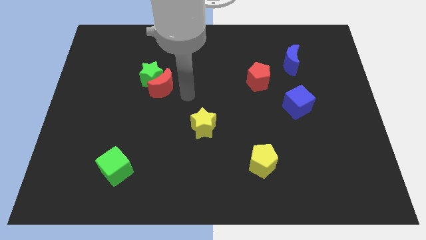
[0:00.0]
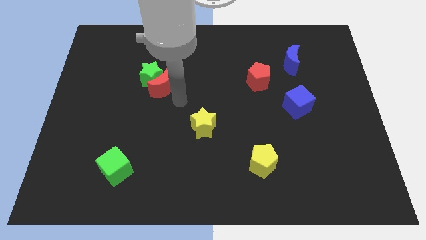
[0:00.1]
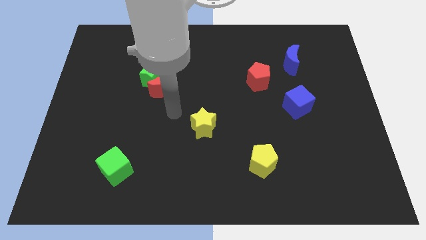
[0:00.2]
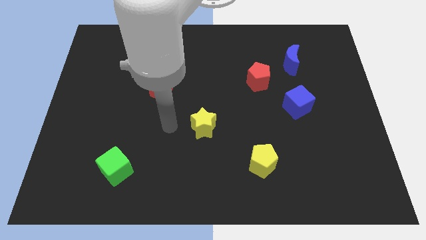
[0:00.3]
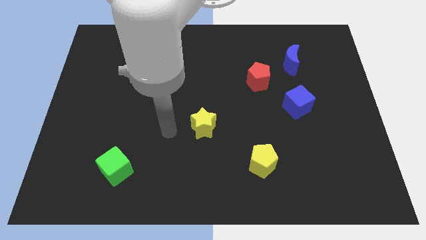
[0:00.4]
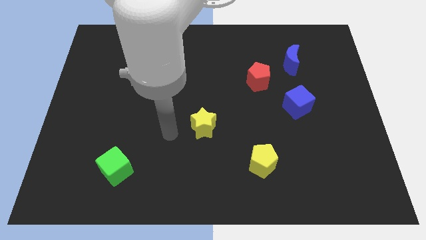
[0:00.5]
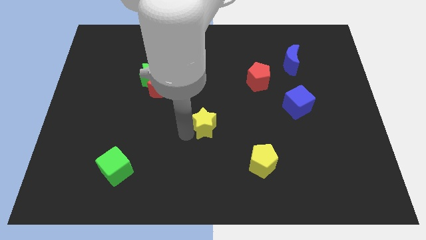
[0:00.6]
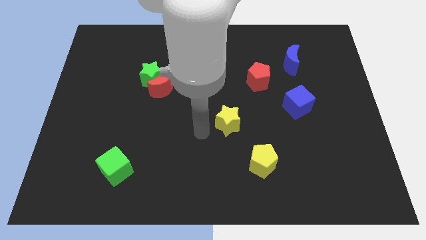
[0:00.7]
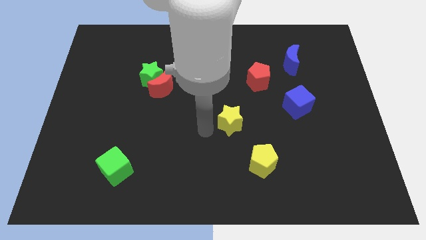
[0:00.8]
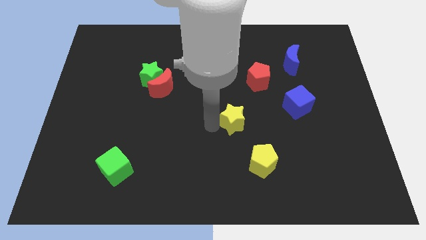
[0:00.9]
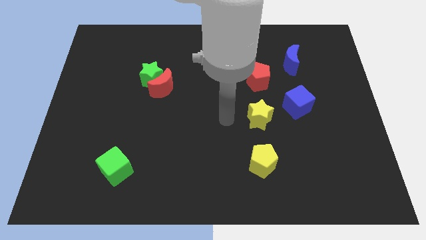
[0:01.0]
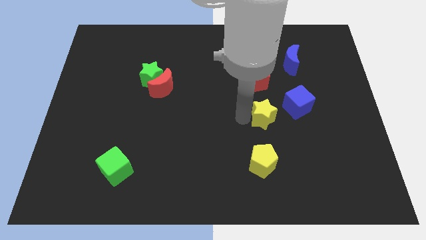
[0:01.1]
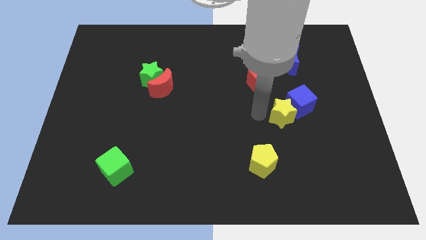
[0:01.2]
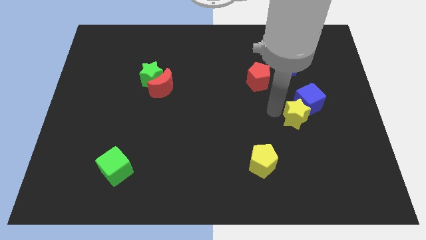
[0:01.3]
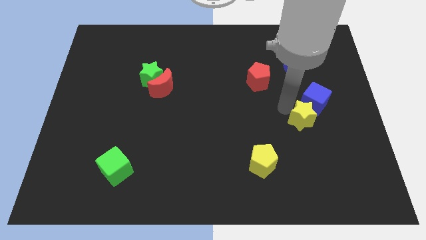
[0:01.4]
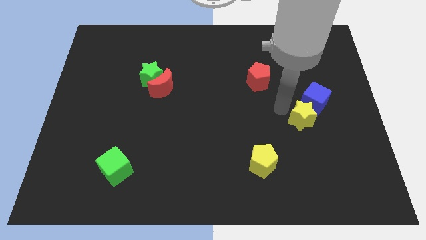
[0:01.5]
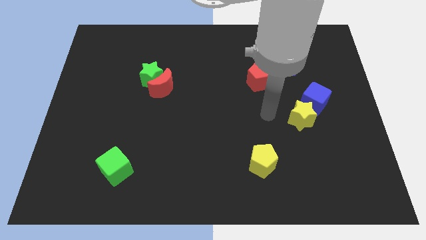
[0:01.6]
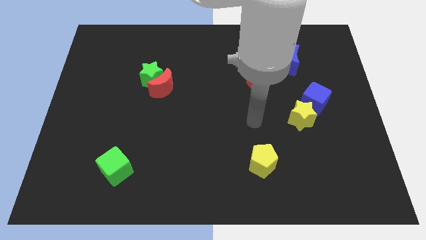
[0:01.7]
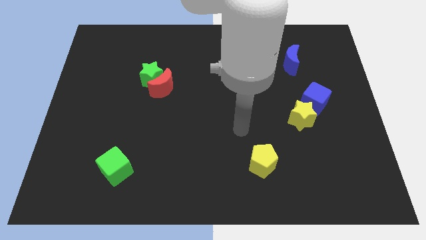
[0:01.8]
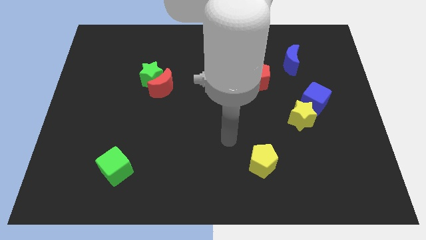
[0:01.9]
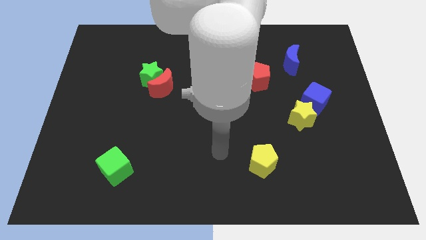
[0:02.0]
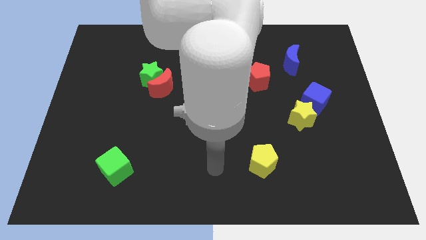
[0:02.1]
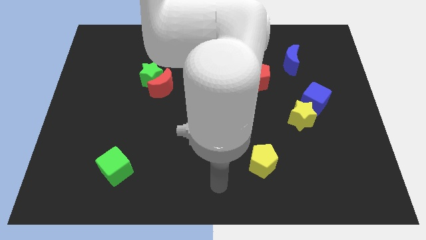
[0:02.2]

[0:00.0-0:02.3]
push the yellow star into the blue cube

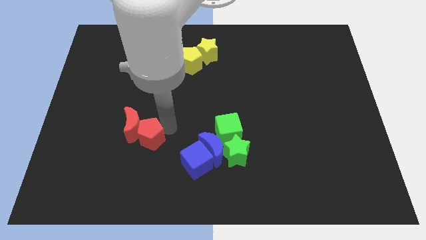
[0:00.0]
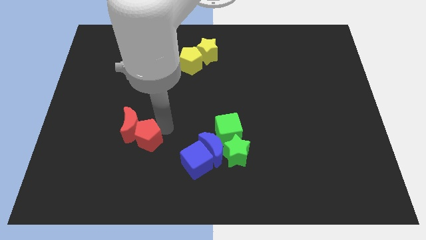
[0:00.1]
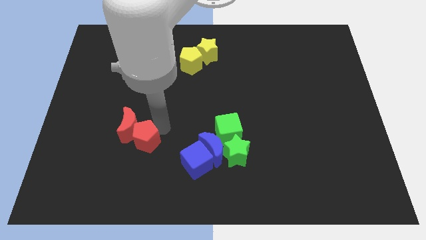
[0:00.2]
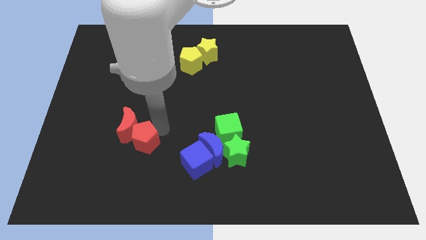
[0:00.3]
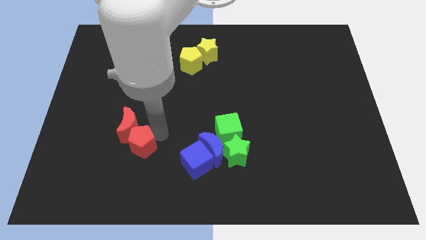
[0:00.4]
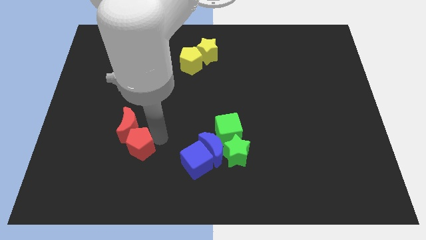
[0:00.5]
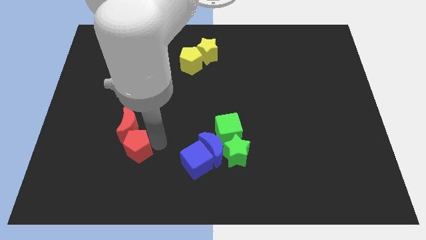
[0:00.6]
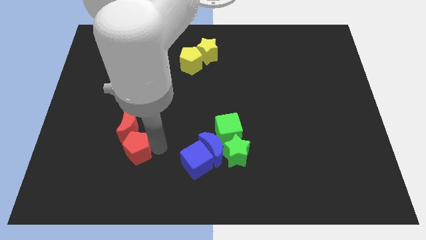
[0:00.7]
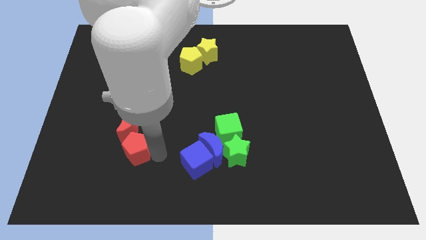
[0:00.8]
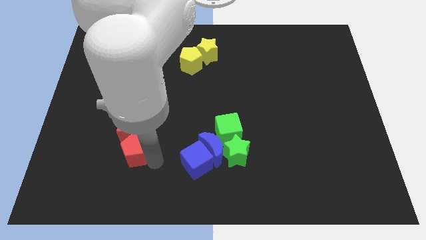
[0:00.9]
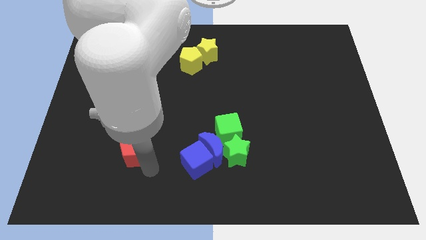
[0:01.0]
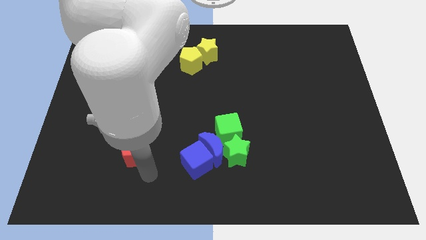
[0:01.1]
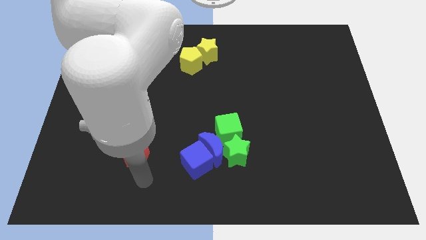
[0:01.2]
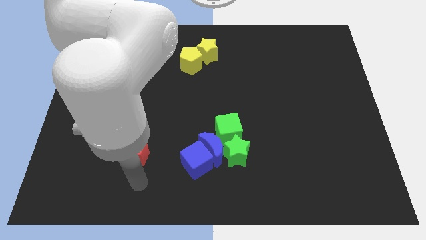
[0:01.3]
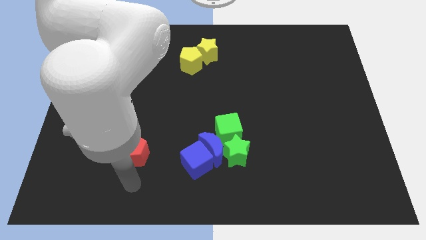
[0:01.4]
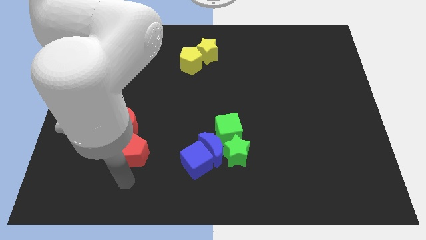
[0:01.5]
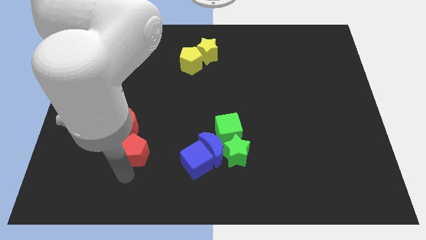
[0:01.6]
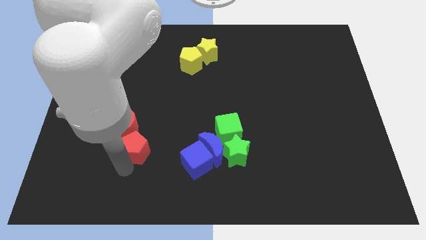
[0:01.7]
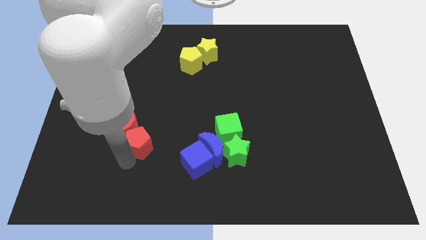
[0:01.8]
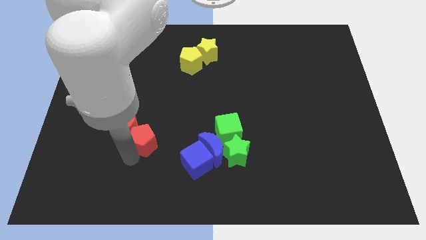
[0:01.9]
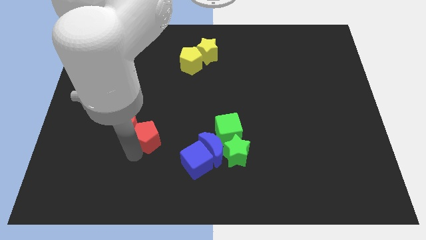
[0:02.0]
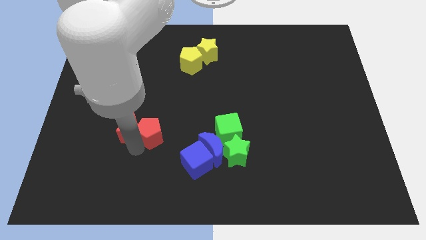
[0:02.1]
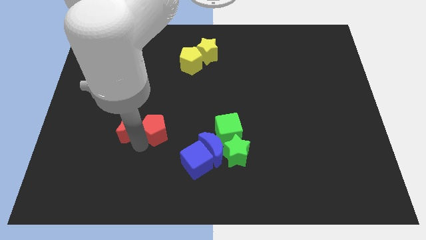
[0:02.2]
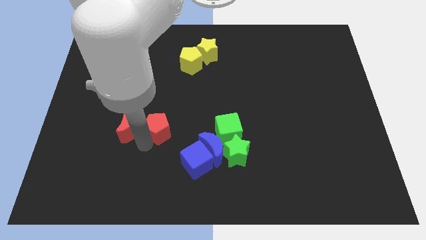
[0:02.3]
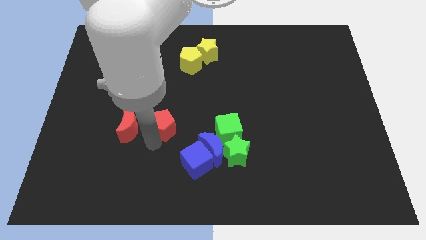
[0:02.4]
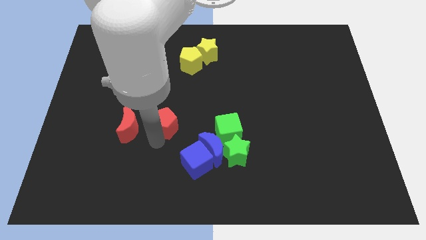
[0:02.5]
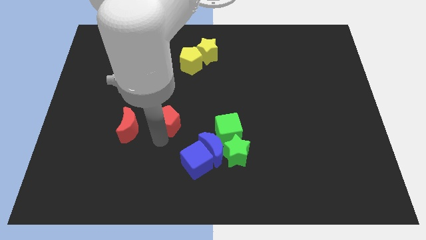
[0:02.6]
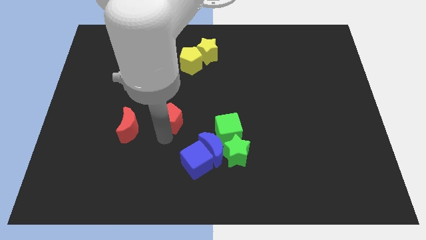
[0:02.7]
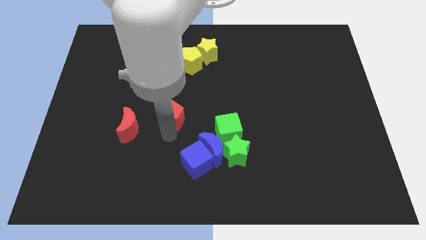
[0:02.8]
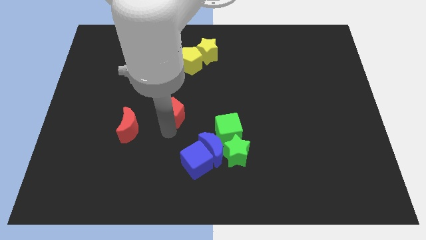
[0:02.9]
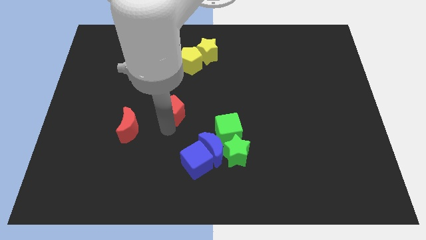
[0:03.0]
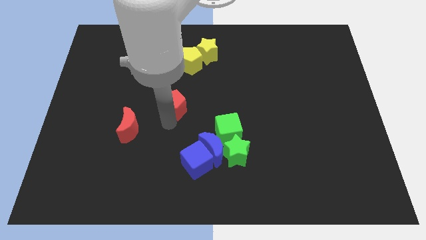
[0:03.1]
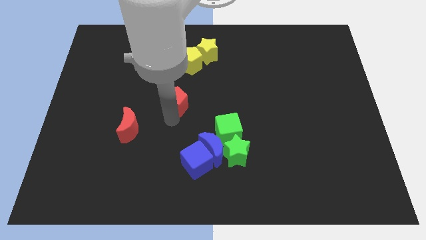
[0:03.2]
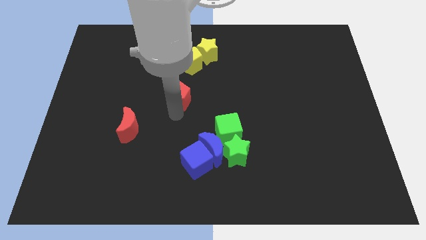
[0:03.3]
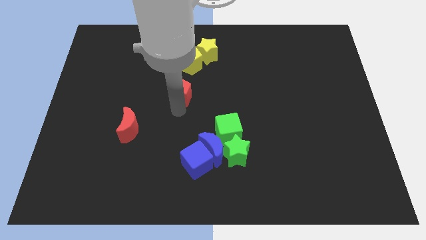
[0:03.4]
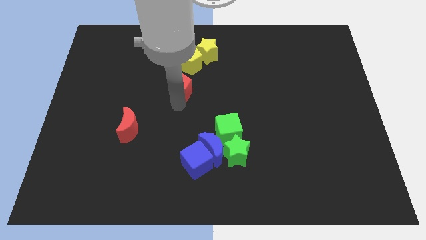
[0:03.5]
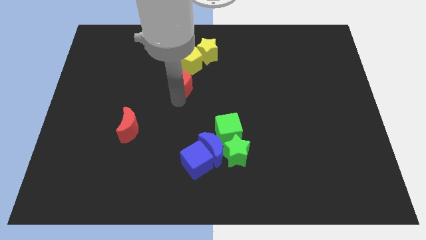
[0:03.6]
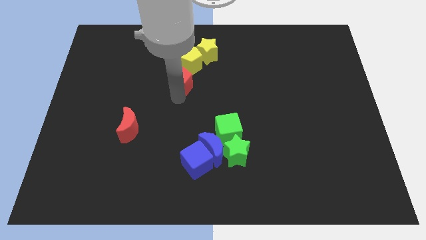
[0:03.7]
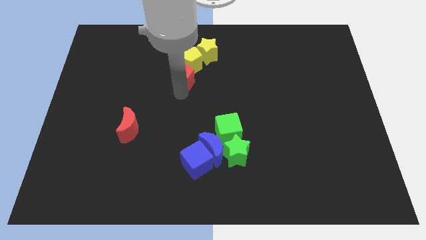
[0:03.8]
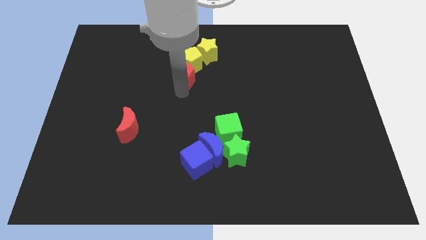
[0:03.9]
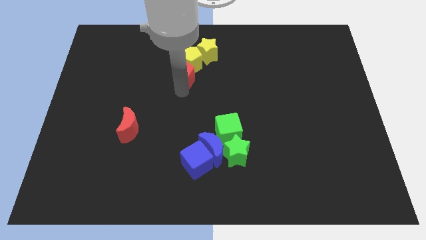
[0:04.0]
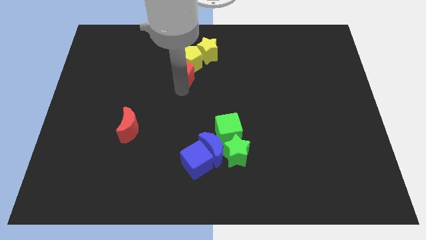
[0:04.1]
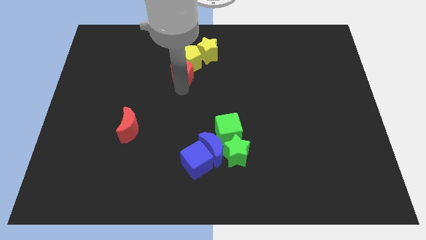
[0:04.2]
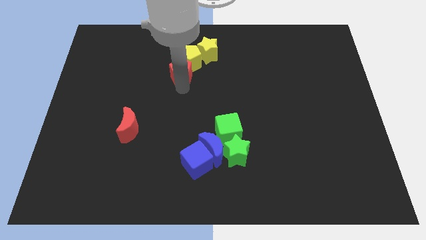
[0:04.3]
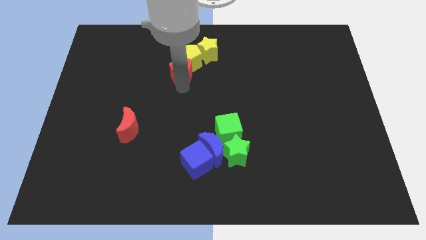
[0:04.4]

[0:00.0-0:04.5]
separate the red pentagon from the red crescent

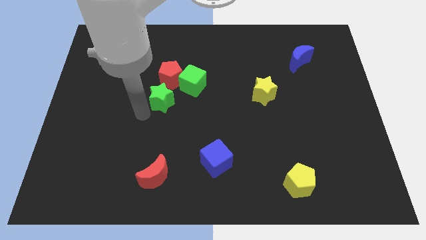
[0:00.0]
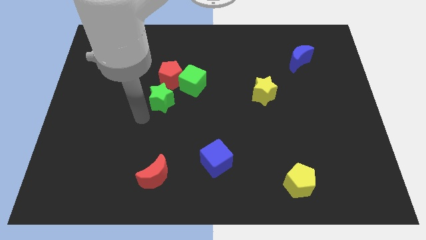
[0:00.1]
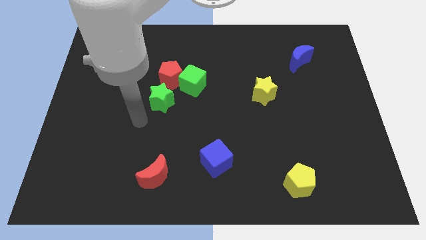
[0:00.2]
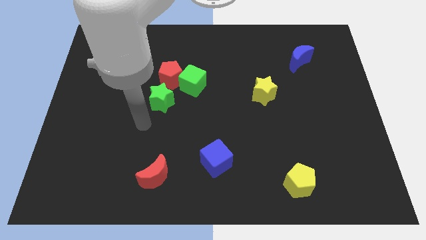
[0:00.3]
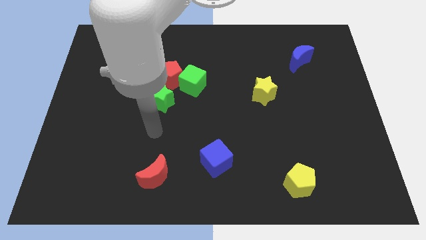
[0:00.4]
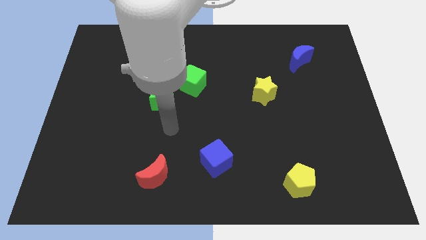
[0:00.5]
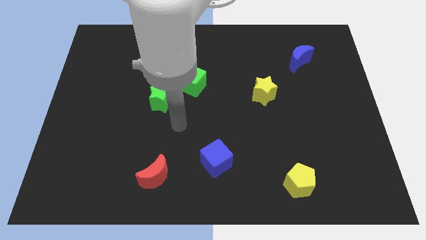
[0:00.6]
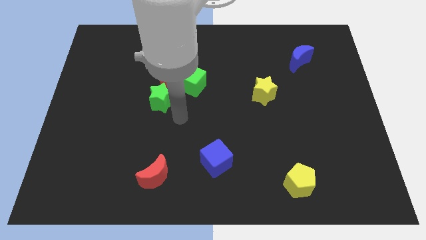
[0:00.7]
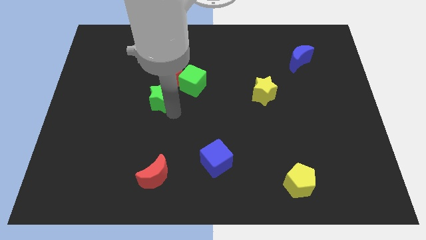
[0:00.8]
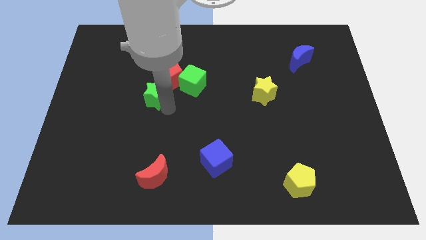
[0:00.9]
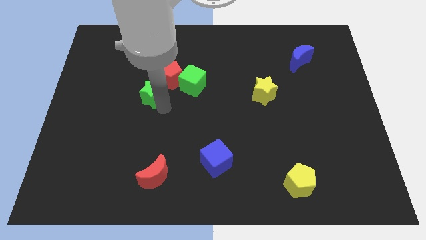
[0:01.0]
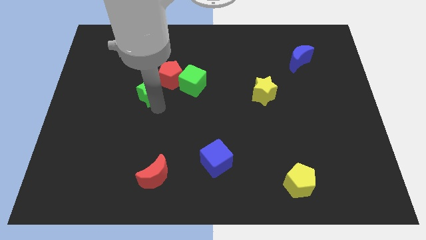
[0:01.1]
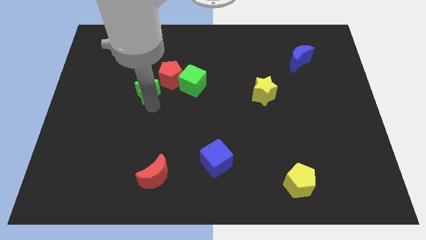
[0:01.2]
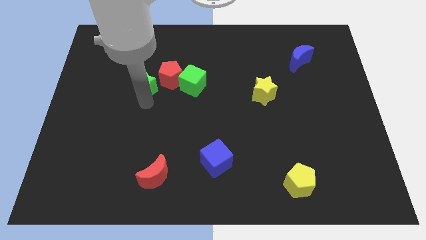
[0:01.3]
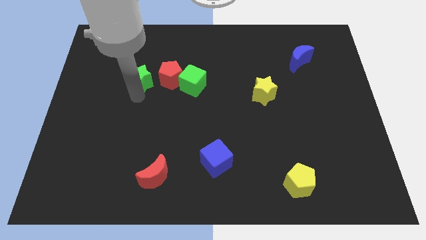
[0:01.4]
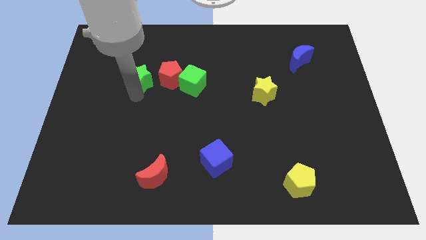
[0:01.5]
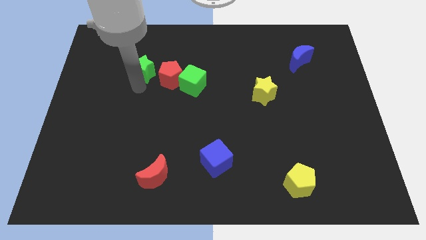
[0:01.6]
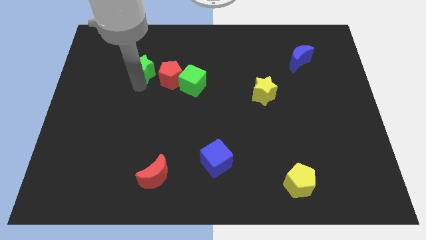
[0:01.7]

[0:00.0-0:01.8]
slide the green star to the left of the red pentagon

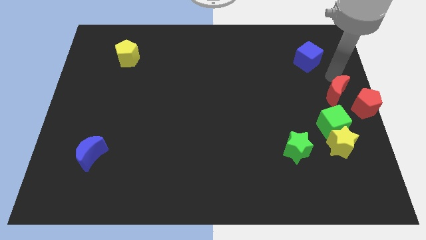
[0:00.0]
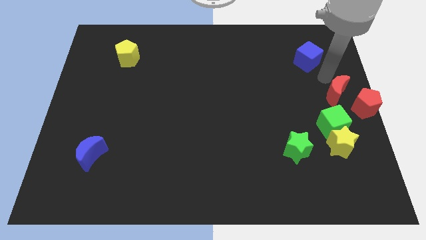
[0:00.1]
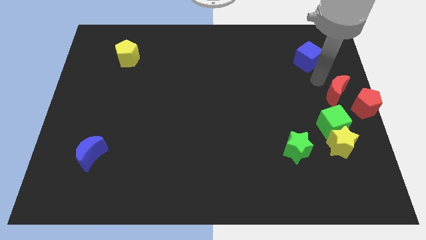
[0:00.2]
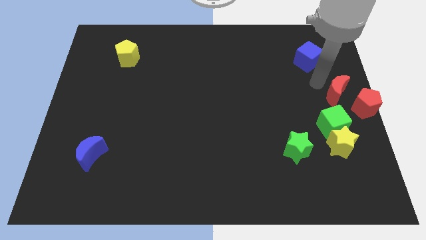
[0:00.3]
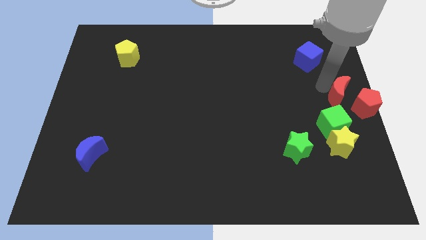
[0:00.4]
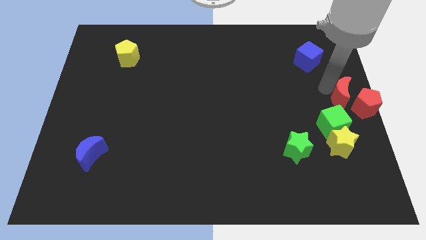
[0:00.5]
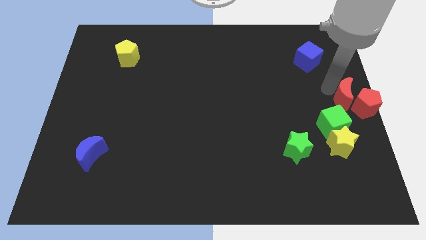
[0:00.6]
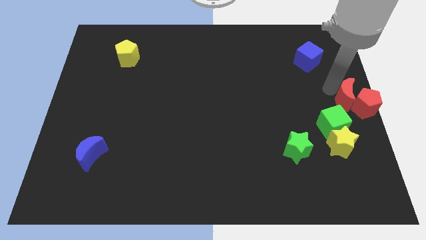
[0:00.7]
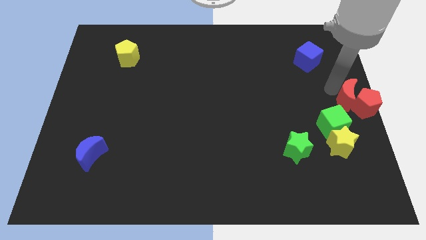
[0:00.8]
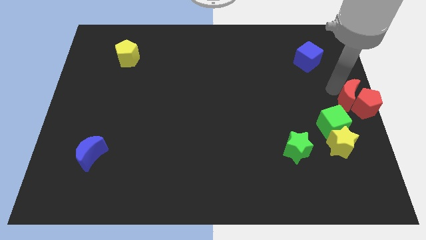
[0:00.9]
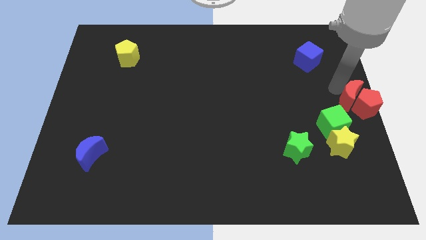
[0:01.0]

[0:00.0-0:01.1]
move the red moon into the red pentagon
